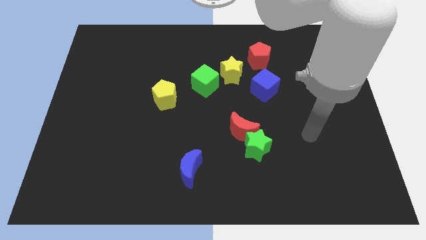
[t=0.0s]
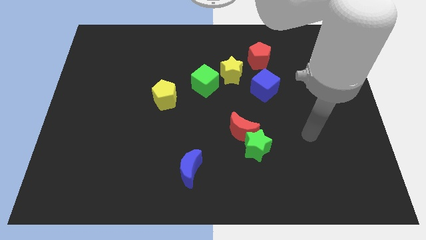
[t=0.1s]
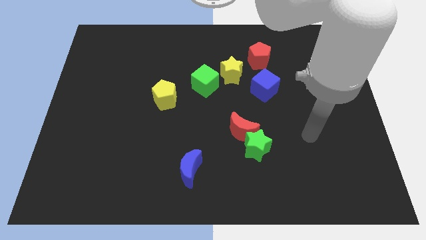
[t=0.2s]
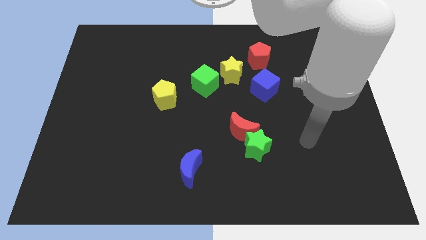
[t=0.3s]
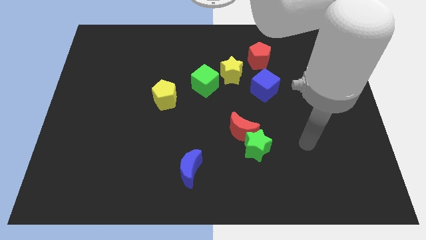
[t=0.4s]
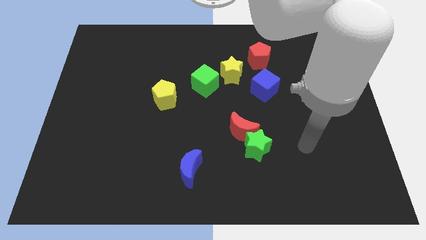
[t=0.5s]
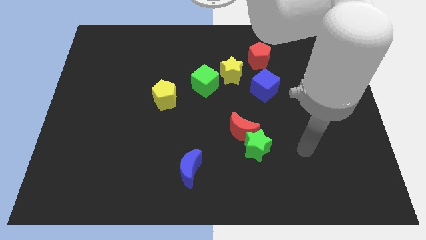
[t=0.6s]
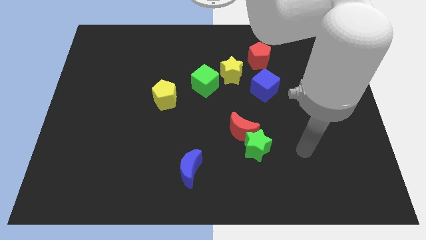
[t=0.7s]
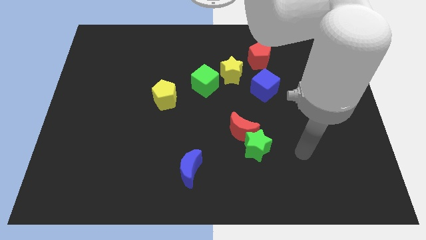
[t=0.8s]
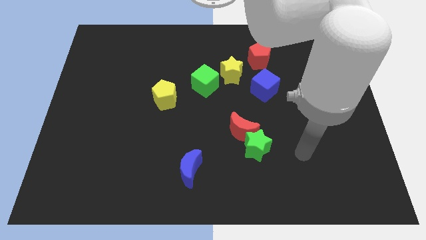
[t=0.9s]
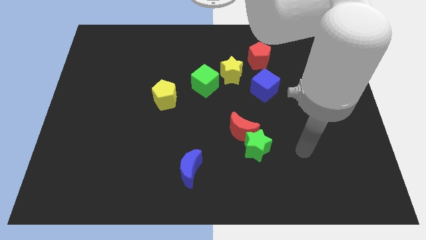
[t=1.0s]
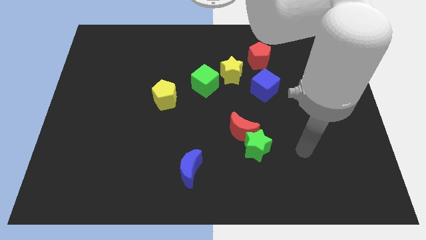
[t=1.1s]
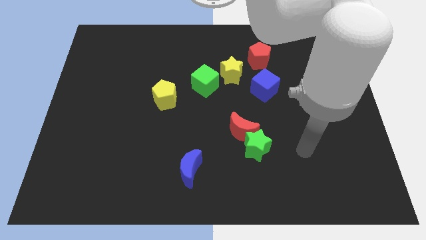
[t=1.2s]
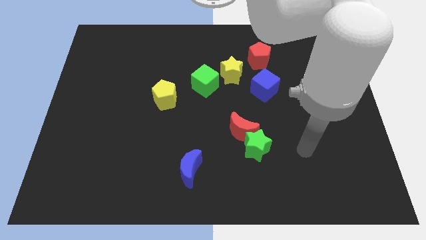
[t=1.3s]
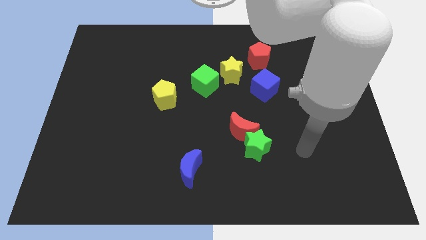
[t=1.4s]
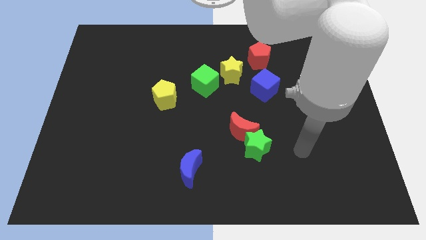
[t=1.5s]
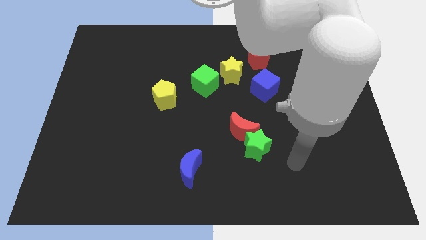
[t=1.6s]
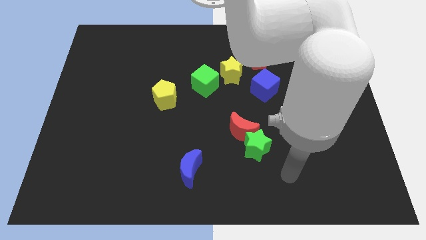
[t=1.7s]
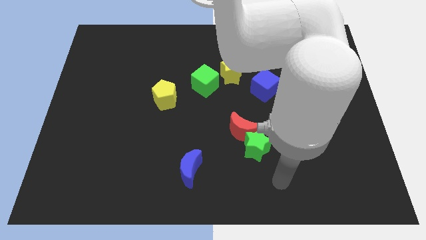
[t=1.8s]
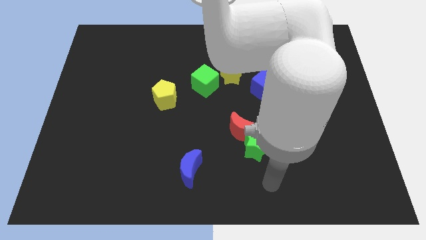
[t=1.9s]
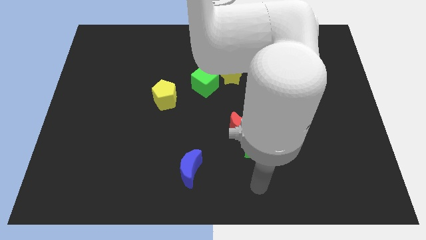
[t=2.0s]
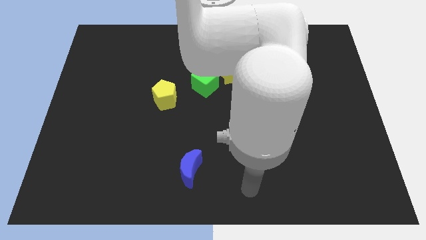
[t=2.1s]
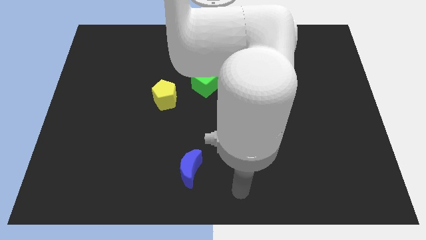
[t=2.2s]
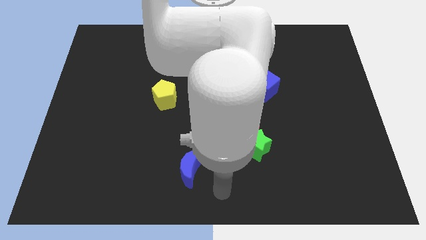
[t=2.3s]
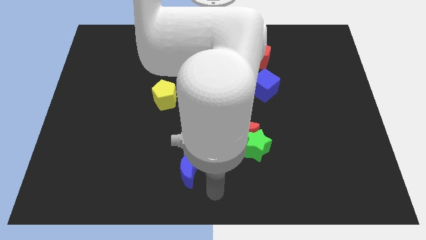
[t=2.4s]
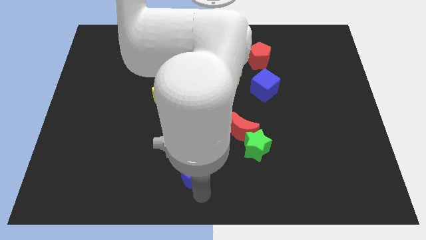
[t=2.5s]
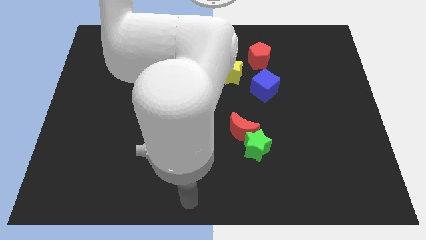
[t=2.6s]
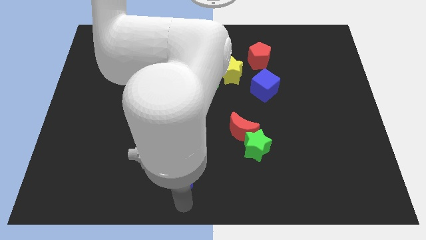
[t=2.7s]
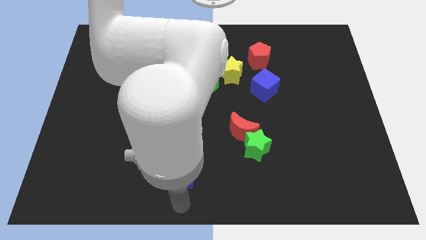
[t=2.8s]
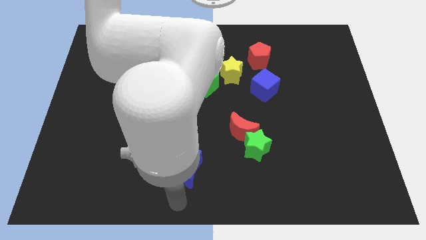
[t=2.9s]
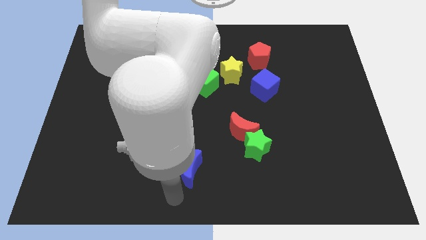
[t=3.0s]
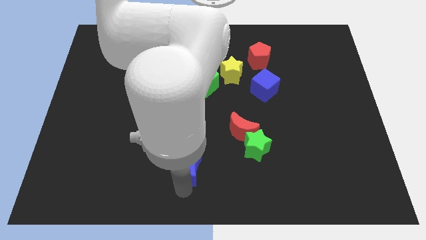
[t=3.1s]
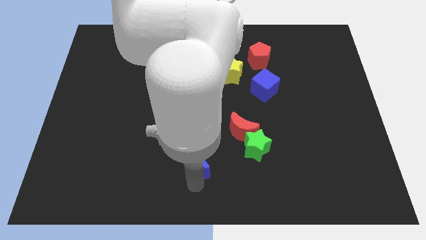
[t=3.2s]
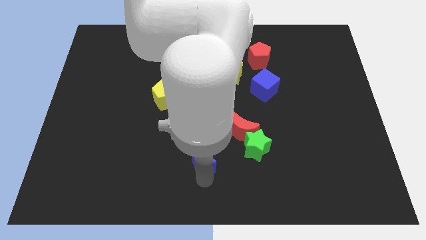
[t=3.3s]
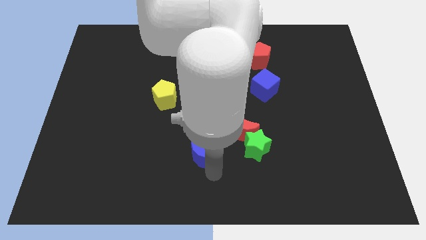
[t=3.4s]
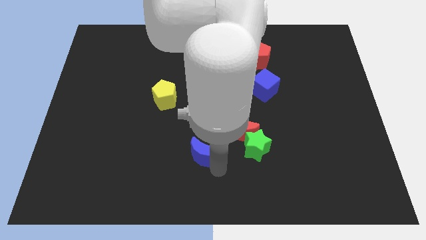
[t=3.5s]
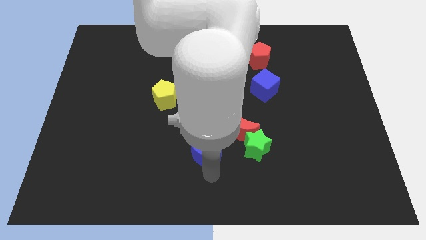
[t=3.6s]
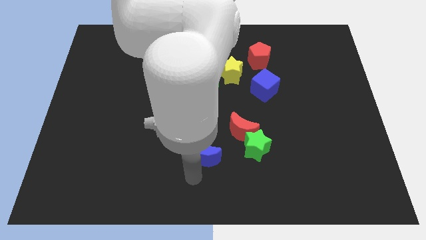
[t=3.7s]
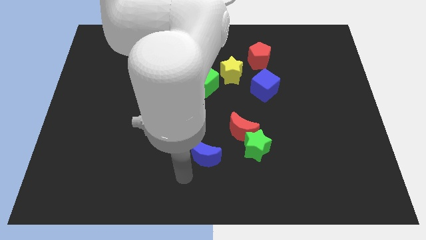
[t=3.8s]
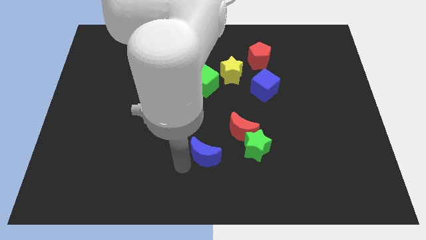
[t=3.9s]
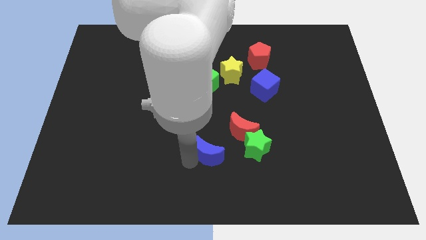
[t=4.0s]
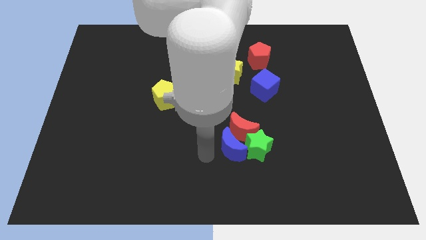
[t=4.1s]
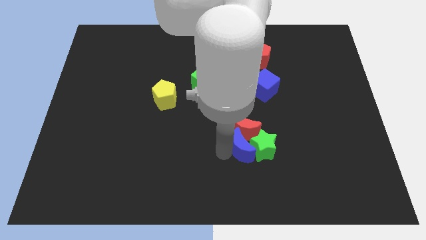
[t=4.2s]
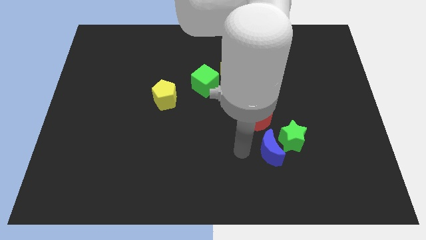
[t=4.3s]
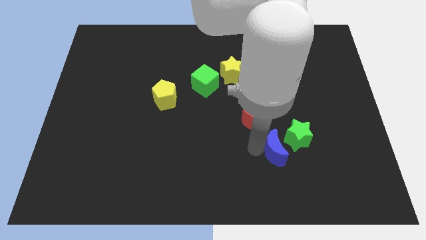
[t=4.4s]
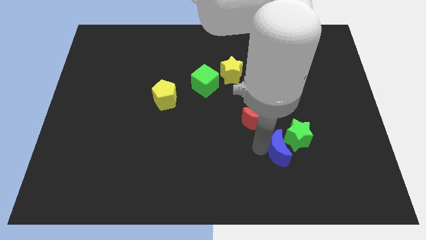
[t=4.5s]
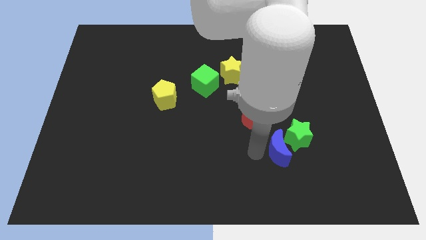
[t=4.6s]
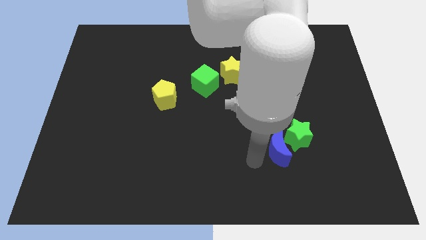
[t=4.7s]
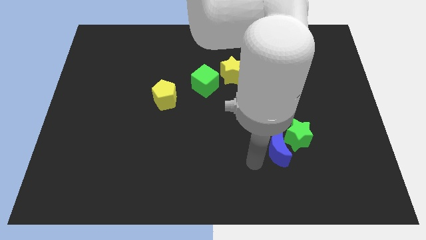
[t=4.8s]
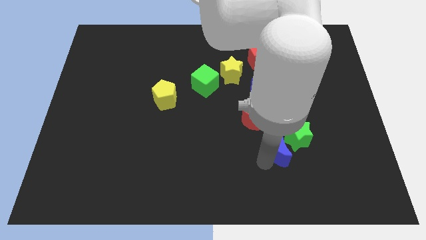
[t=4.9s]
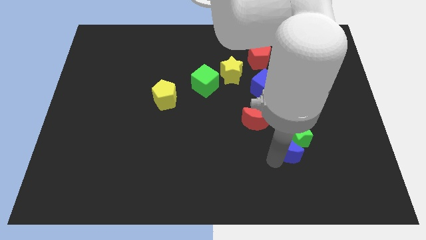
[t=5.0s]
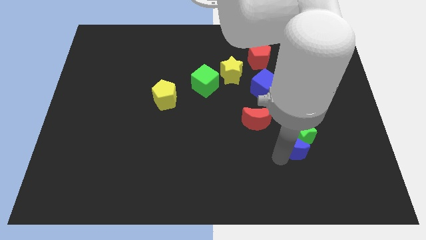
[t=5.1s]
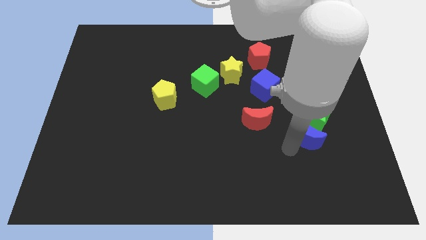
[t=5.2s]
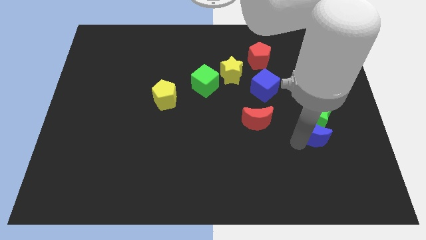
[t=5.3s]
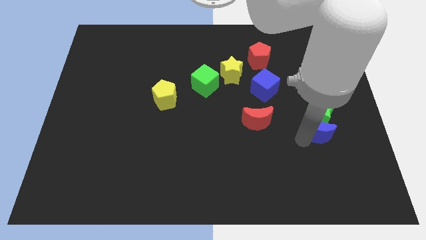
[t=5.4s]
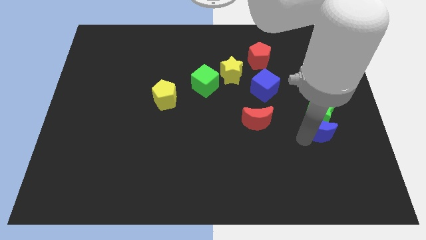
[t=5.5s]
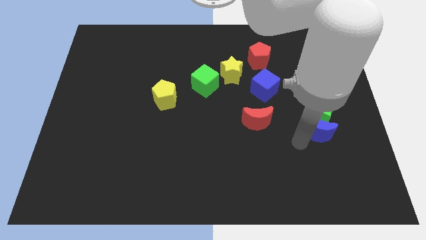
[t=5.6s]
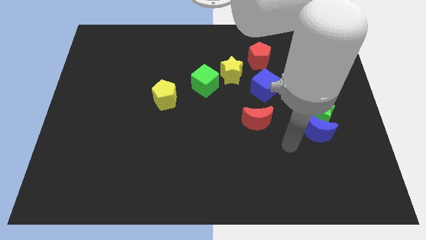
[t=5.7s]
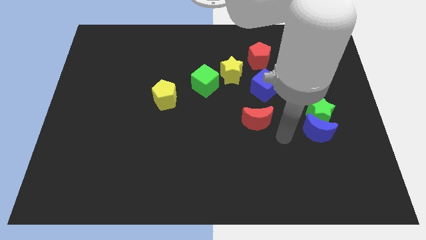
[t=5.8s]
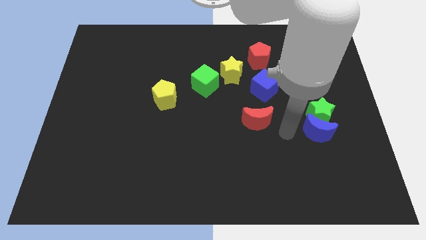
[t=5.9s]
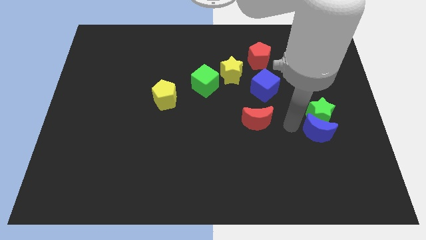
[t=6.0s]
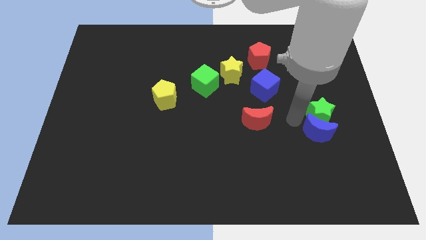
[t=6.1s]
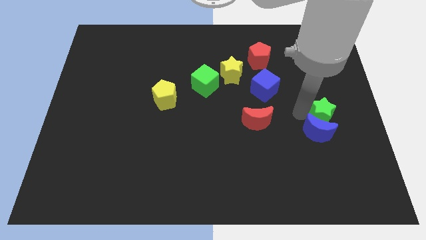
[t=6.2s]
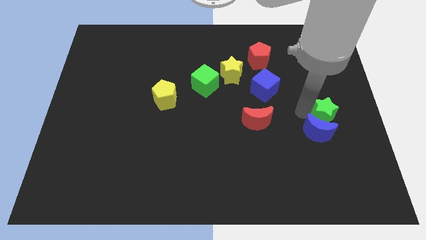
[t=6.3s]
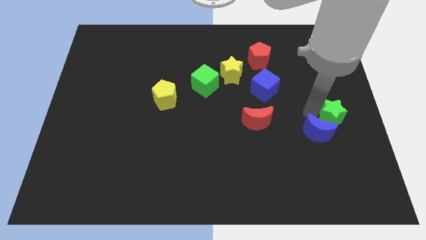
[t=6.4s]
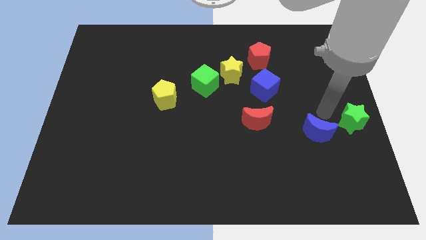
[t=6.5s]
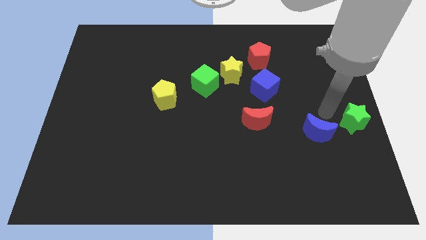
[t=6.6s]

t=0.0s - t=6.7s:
separate the red crescent from the green star and the blue crescent

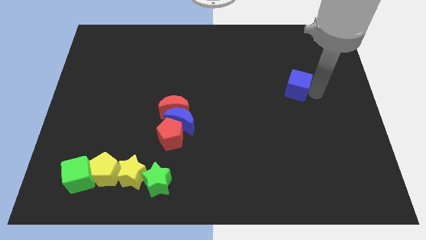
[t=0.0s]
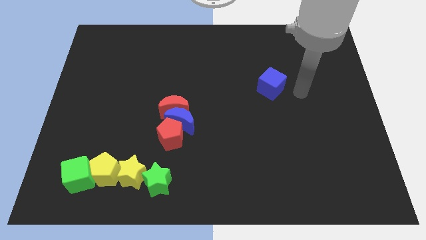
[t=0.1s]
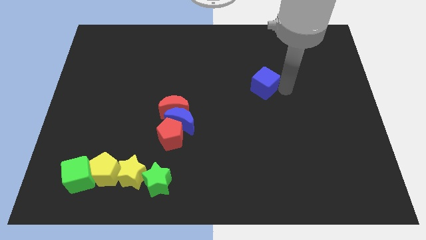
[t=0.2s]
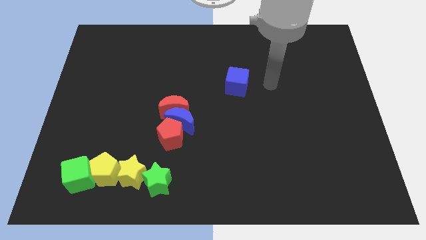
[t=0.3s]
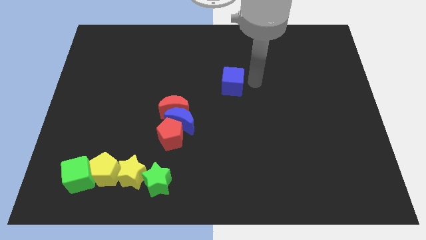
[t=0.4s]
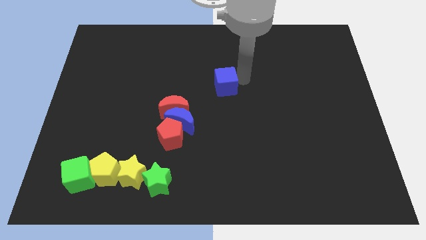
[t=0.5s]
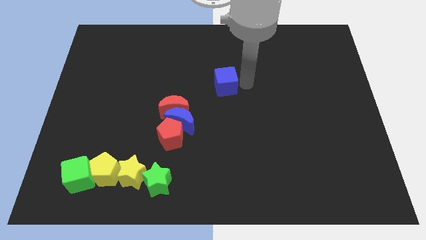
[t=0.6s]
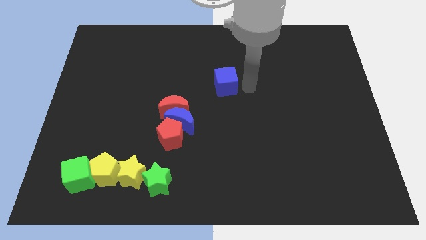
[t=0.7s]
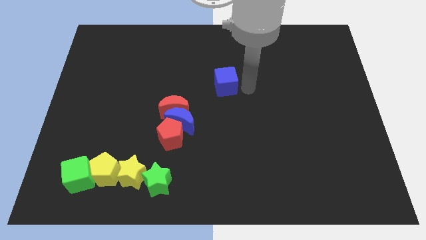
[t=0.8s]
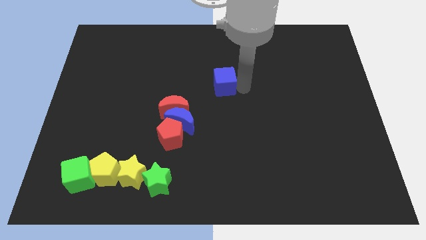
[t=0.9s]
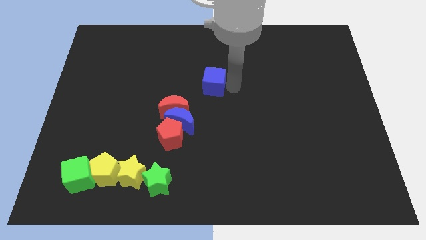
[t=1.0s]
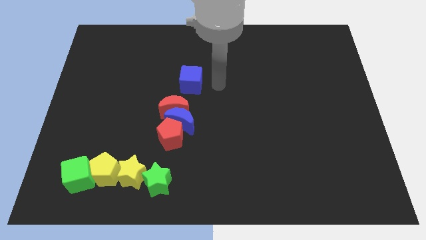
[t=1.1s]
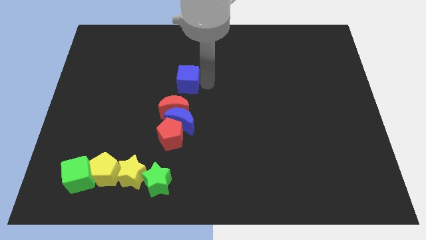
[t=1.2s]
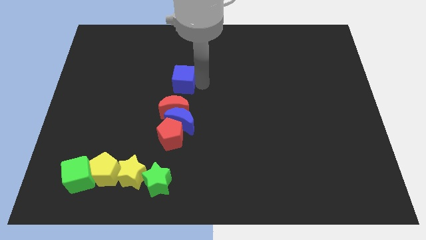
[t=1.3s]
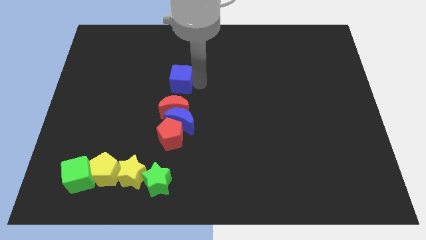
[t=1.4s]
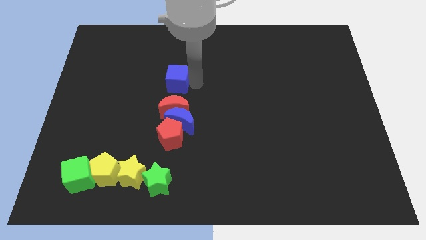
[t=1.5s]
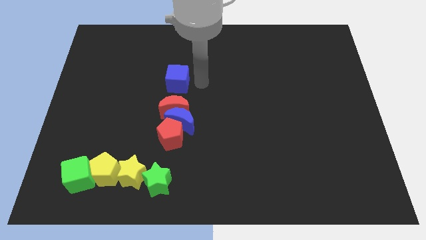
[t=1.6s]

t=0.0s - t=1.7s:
place blue cube above red crescent

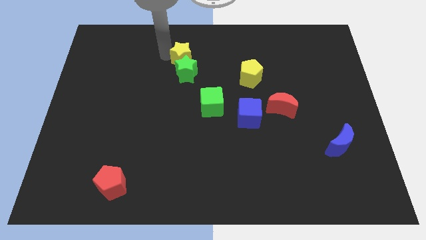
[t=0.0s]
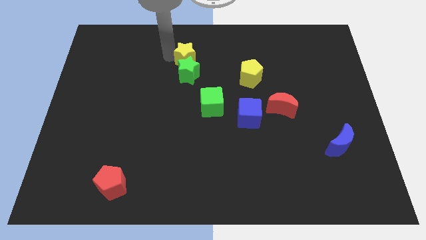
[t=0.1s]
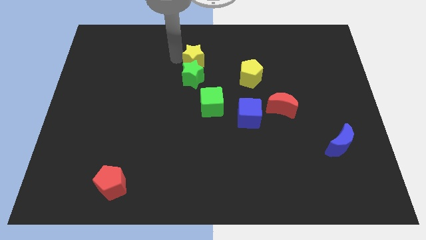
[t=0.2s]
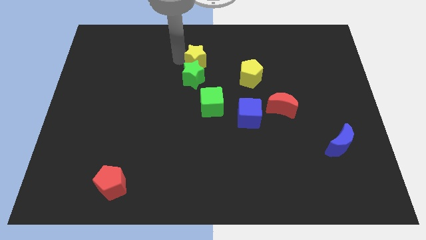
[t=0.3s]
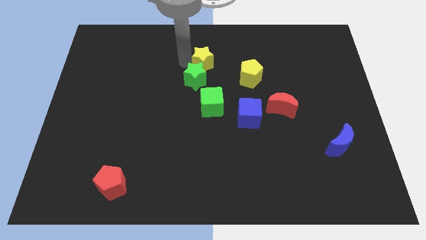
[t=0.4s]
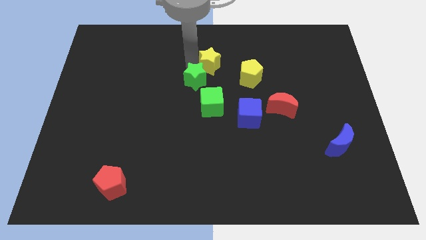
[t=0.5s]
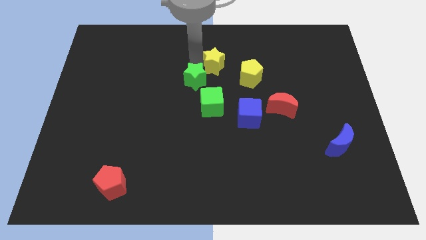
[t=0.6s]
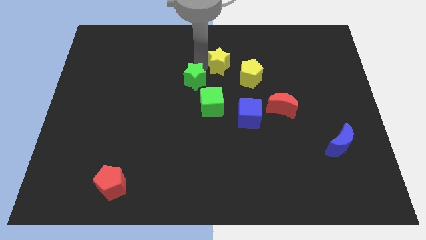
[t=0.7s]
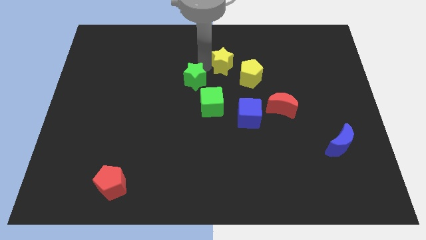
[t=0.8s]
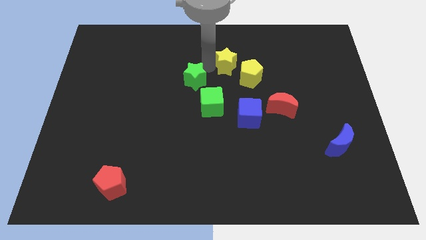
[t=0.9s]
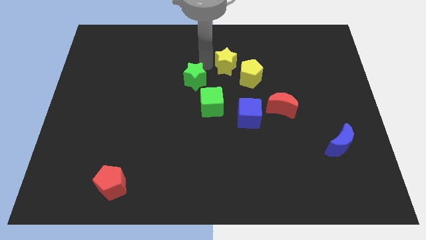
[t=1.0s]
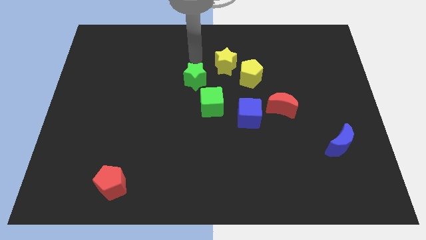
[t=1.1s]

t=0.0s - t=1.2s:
separate yellow and green stars
